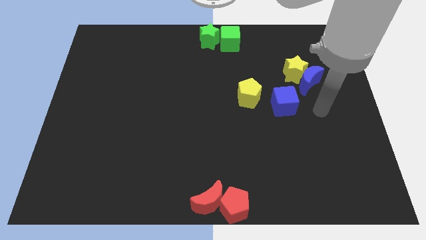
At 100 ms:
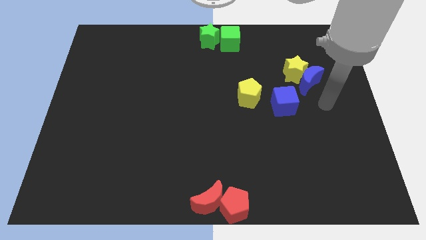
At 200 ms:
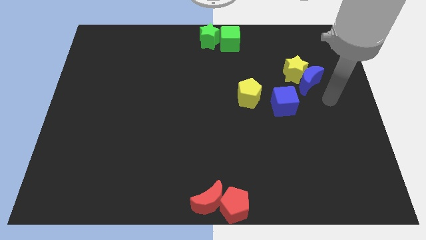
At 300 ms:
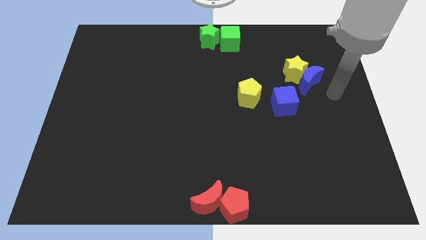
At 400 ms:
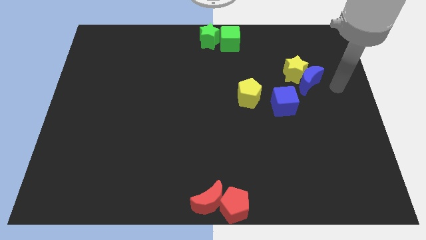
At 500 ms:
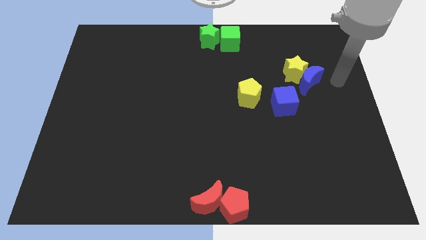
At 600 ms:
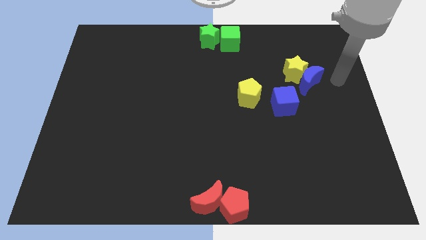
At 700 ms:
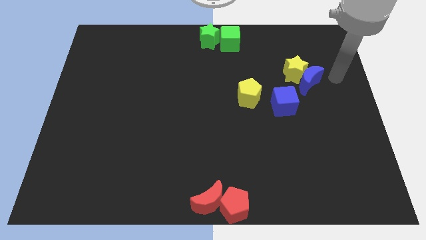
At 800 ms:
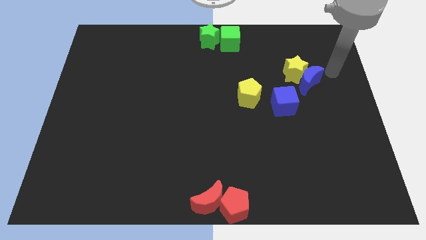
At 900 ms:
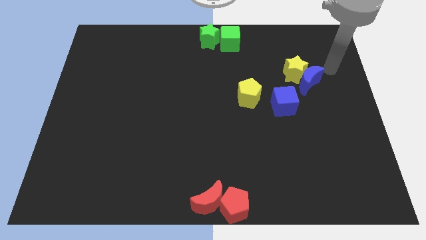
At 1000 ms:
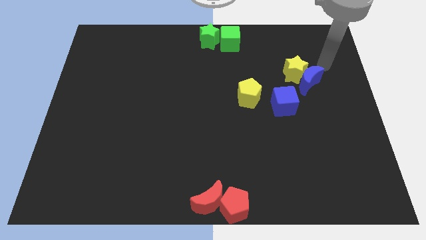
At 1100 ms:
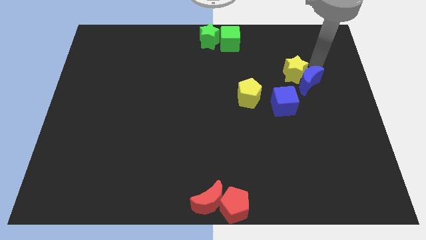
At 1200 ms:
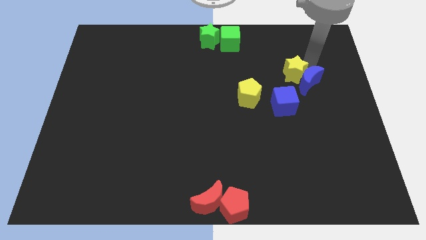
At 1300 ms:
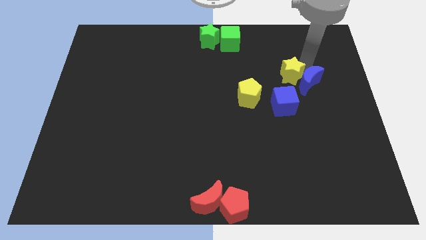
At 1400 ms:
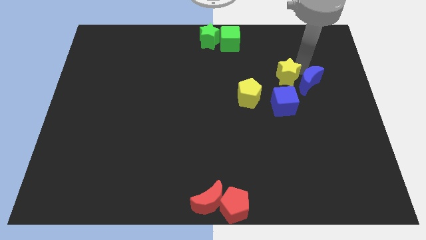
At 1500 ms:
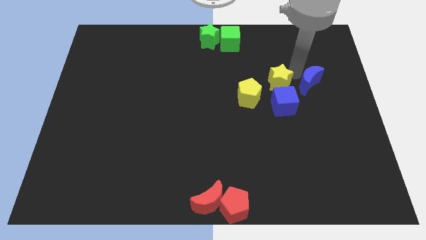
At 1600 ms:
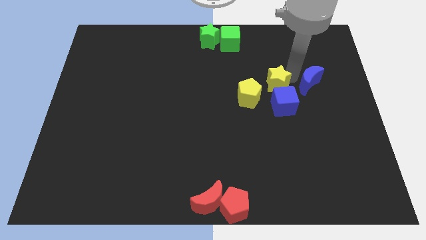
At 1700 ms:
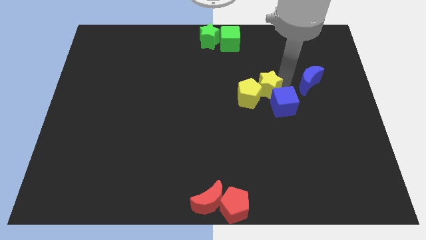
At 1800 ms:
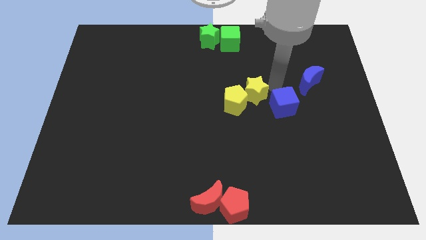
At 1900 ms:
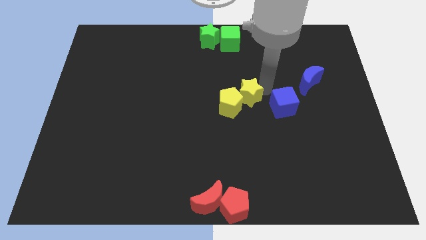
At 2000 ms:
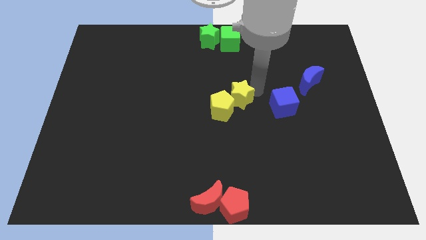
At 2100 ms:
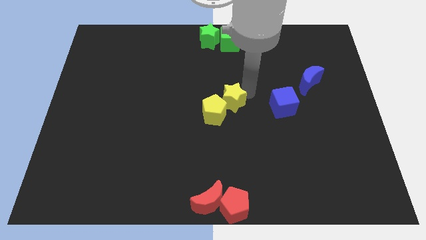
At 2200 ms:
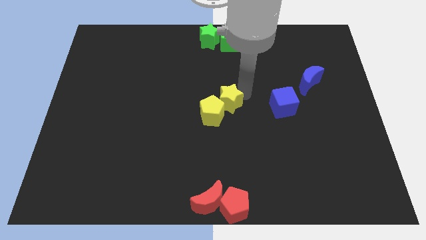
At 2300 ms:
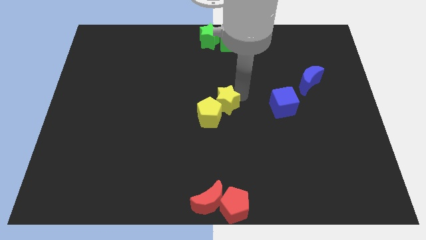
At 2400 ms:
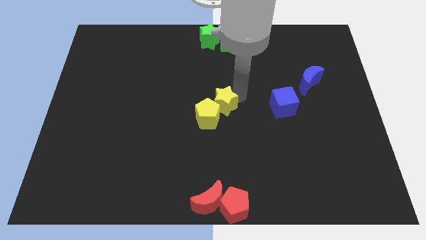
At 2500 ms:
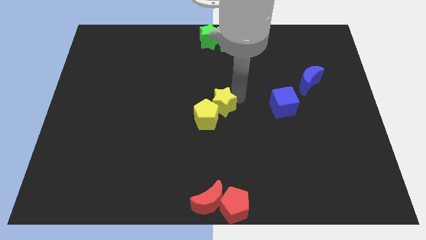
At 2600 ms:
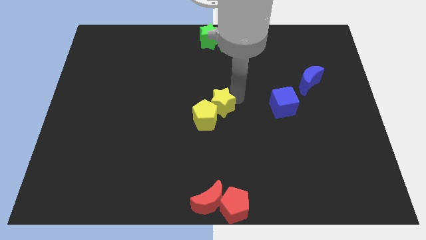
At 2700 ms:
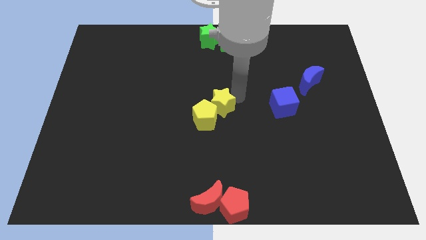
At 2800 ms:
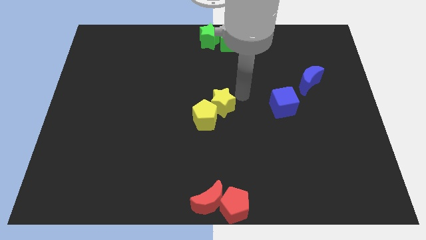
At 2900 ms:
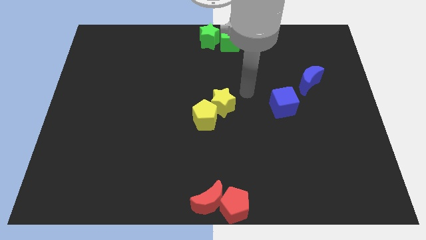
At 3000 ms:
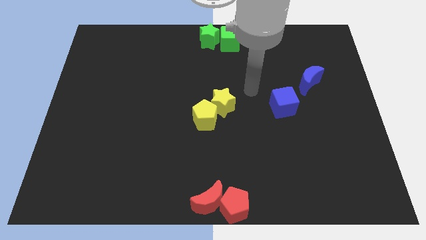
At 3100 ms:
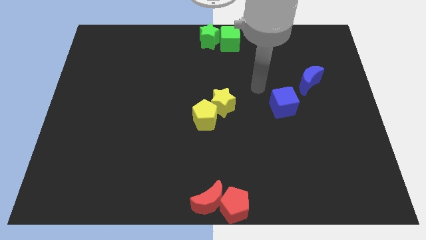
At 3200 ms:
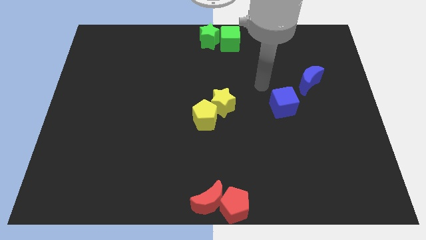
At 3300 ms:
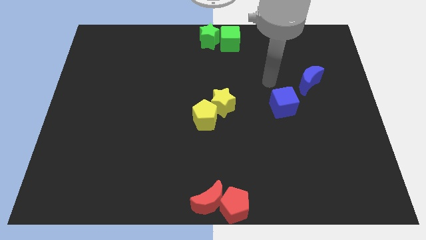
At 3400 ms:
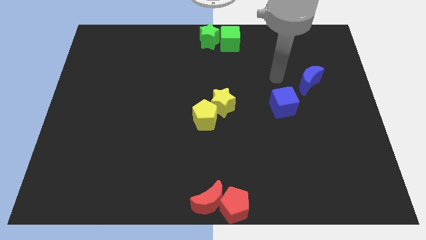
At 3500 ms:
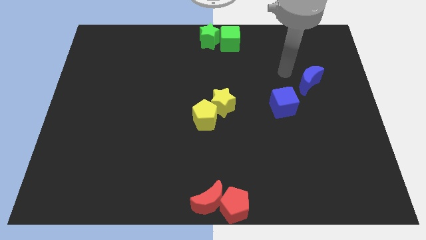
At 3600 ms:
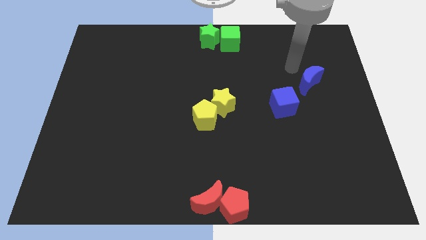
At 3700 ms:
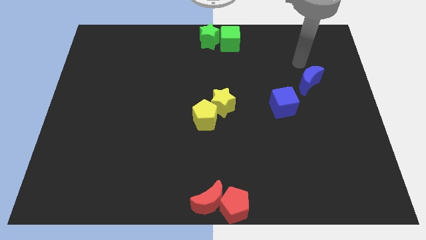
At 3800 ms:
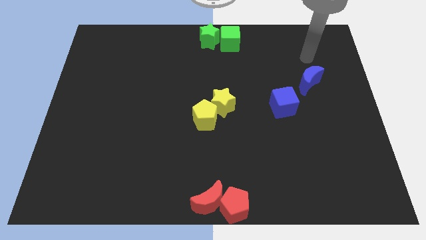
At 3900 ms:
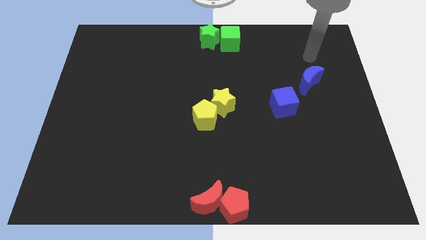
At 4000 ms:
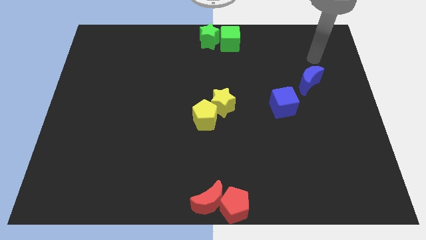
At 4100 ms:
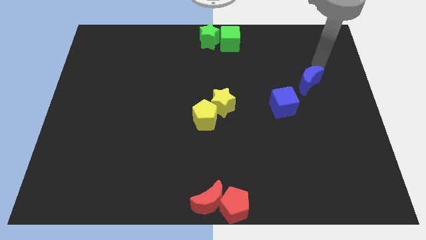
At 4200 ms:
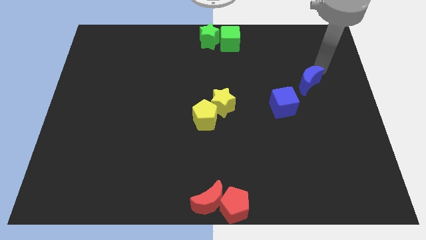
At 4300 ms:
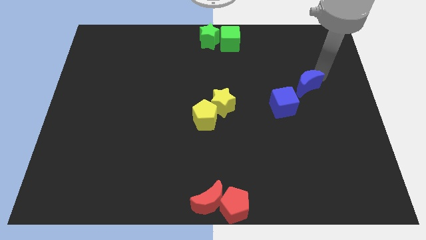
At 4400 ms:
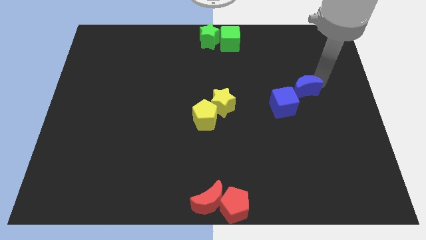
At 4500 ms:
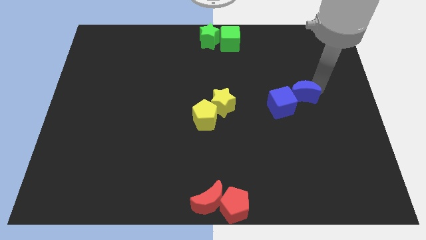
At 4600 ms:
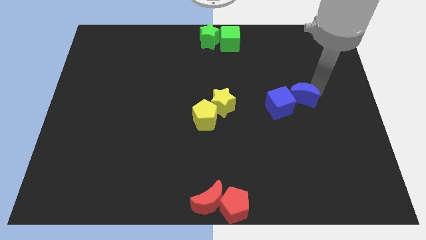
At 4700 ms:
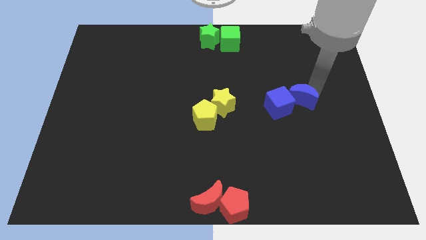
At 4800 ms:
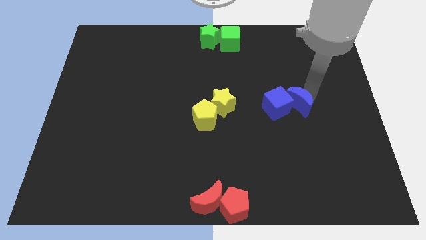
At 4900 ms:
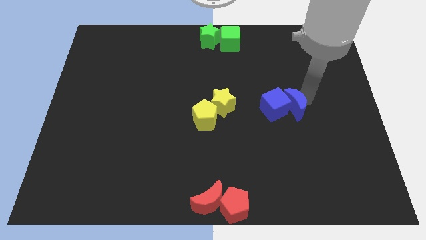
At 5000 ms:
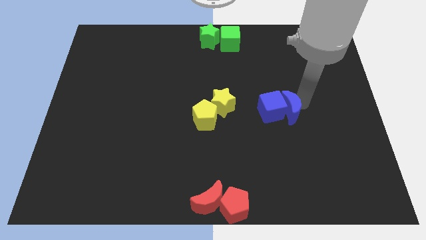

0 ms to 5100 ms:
push the yellow blocks to the centre of the board

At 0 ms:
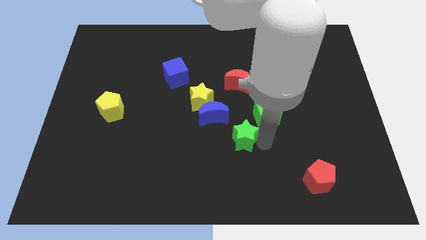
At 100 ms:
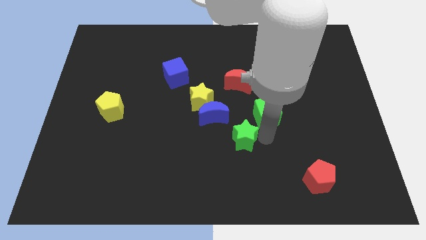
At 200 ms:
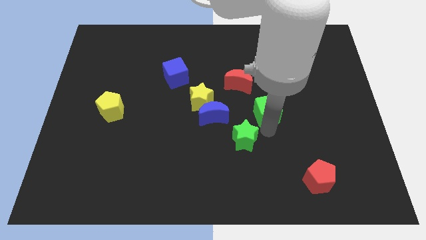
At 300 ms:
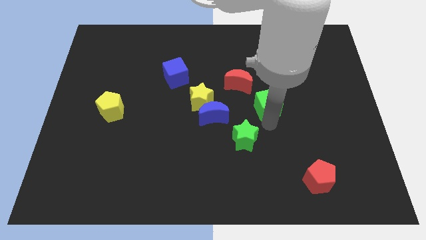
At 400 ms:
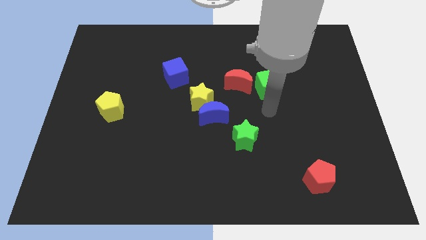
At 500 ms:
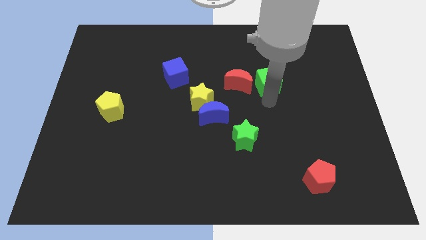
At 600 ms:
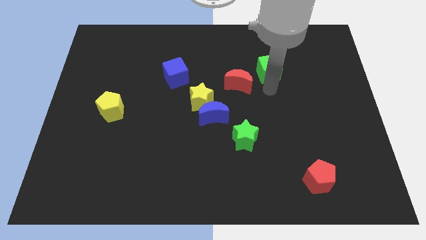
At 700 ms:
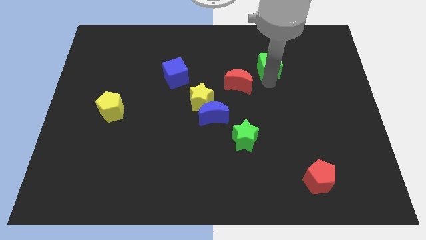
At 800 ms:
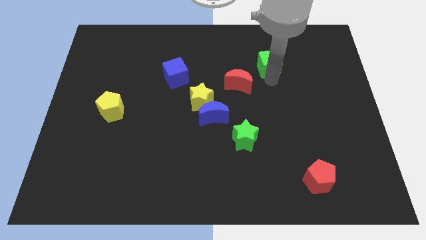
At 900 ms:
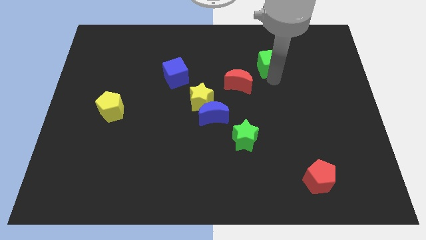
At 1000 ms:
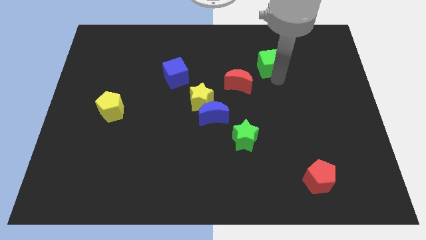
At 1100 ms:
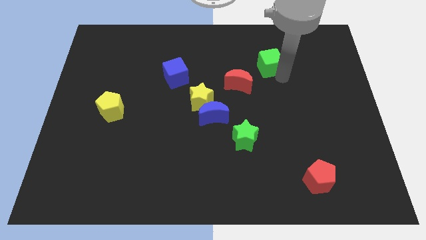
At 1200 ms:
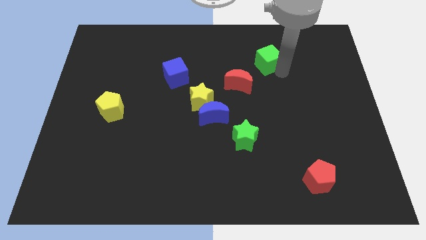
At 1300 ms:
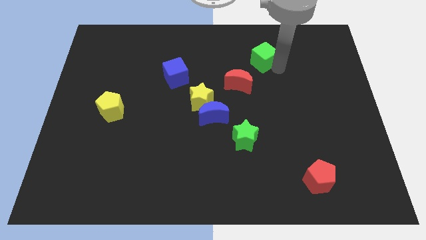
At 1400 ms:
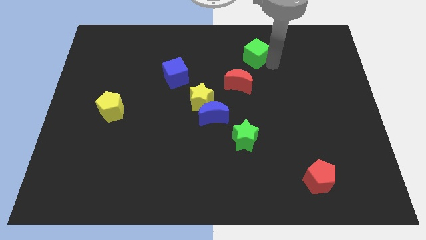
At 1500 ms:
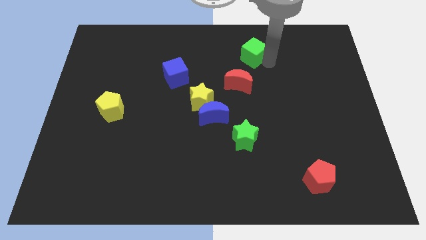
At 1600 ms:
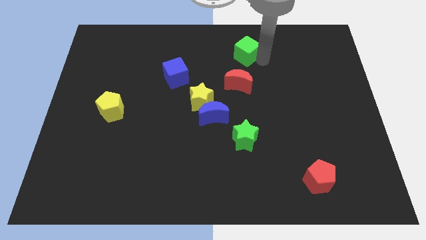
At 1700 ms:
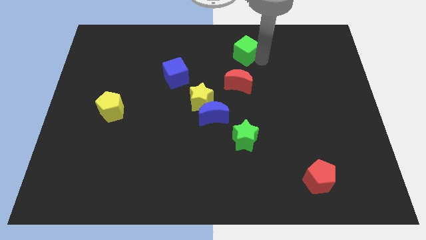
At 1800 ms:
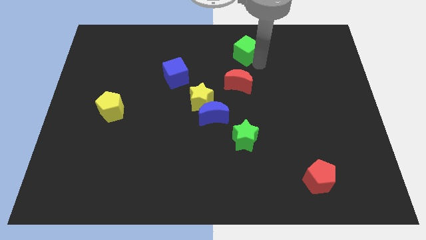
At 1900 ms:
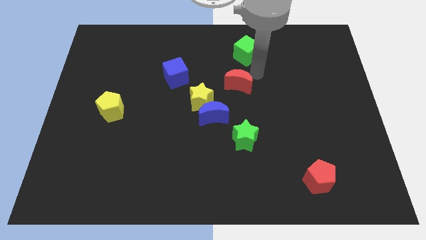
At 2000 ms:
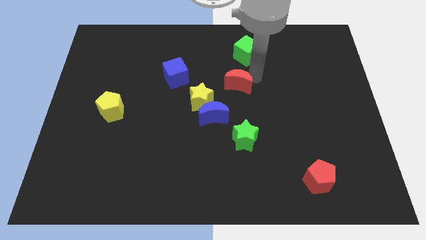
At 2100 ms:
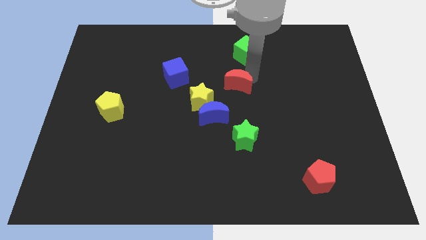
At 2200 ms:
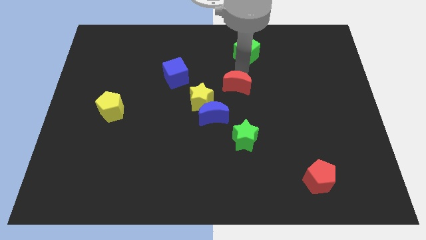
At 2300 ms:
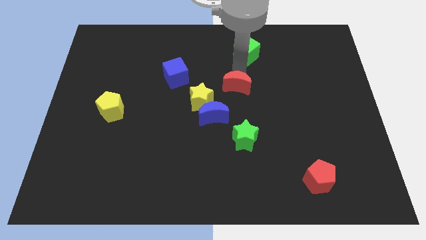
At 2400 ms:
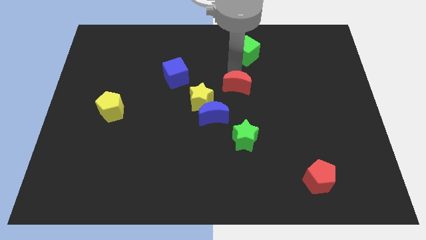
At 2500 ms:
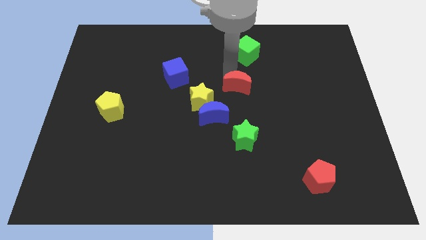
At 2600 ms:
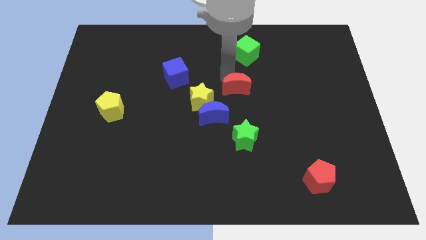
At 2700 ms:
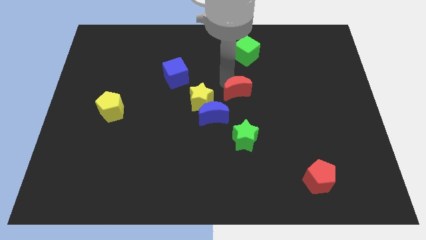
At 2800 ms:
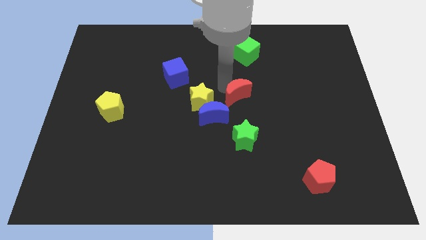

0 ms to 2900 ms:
place the green cube above the red moon

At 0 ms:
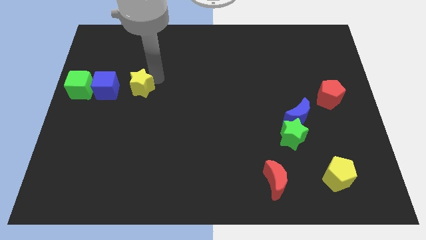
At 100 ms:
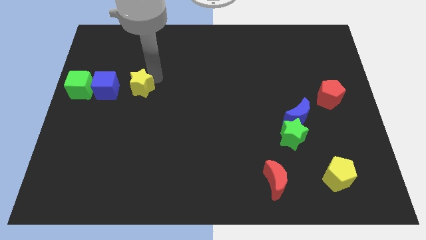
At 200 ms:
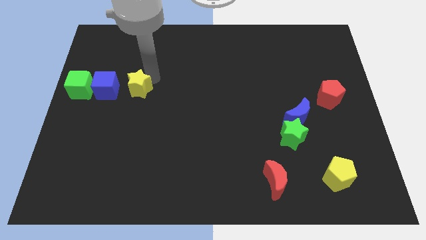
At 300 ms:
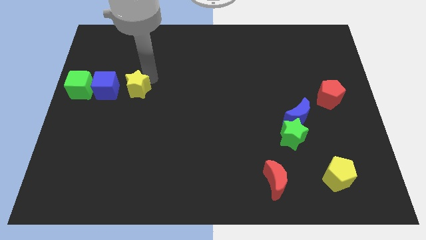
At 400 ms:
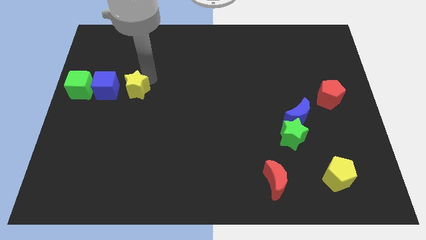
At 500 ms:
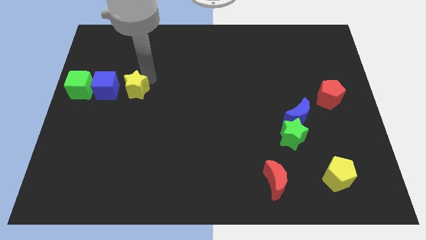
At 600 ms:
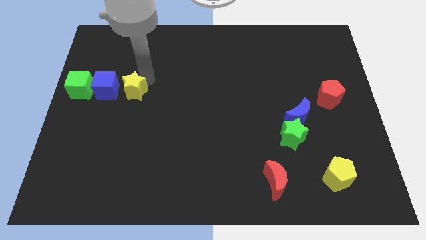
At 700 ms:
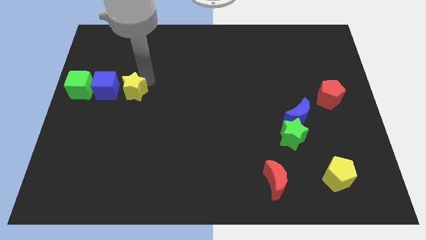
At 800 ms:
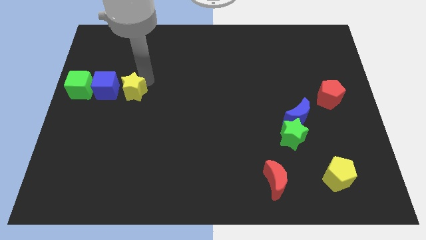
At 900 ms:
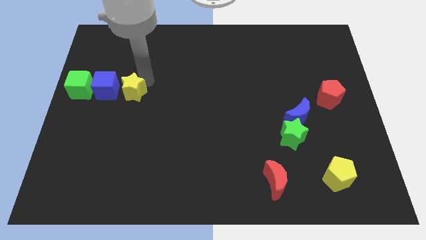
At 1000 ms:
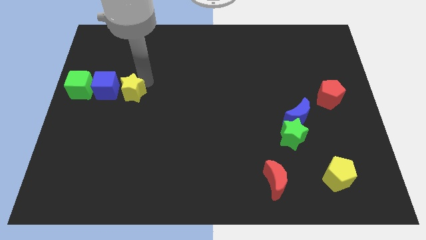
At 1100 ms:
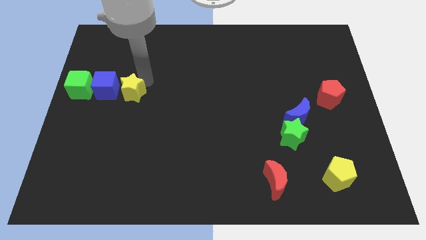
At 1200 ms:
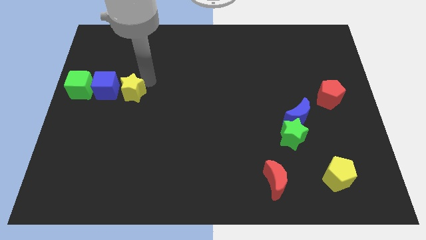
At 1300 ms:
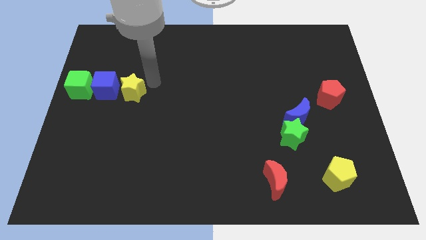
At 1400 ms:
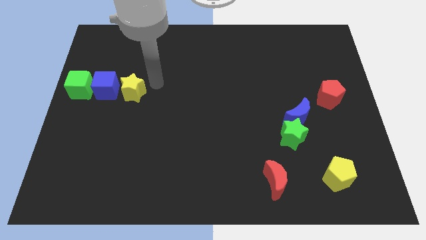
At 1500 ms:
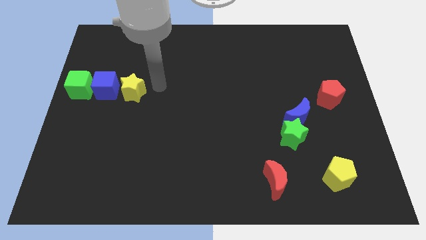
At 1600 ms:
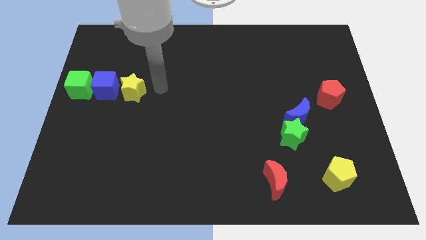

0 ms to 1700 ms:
place yellow star near blue cube
